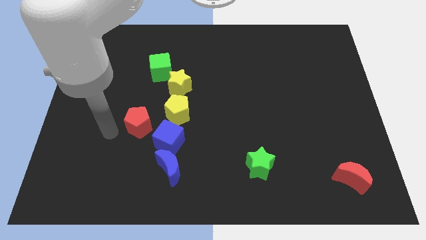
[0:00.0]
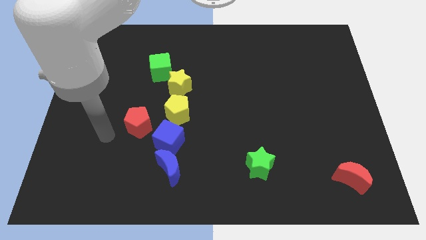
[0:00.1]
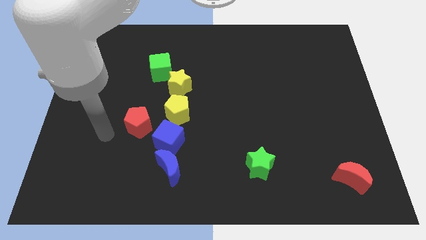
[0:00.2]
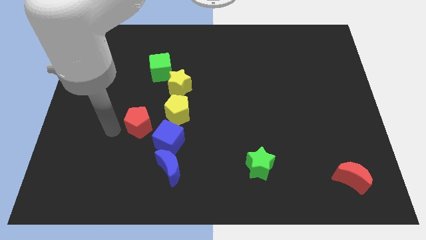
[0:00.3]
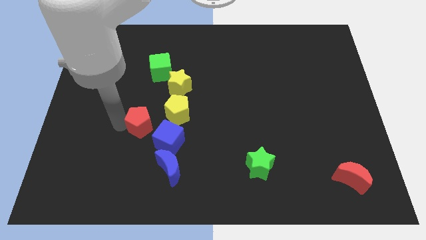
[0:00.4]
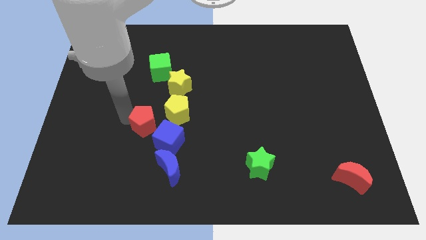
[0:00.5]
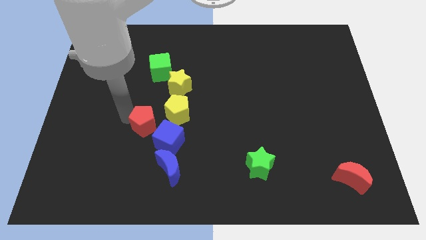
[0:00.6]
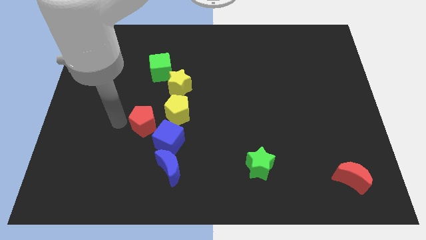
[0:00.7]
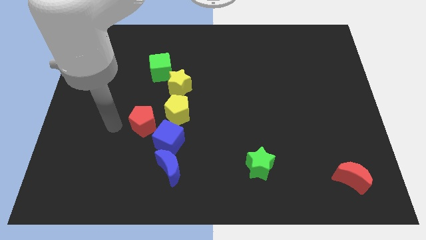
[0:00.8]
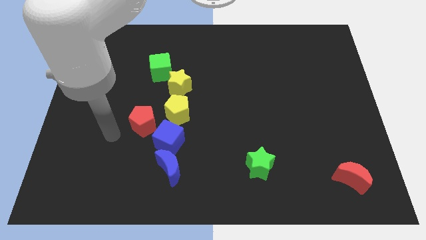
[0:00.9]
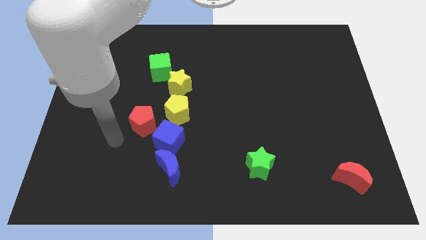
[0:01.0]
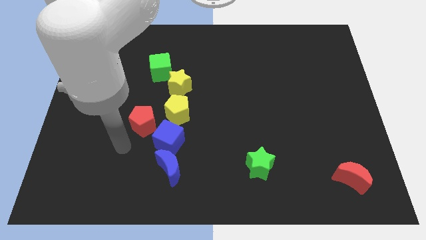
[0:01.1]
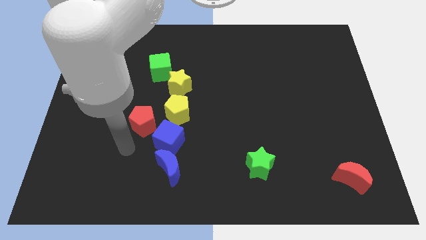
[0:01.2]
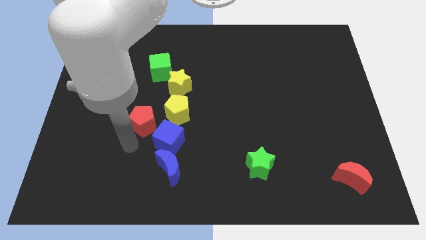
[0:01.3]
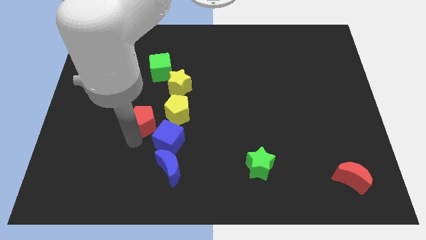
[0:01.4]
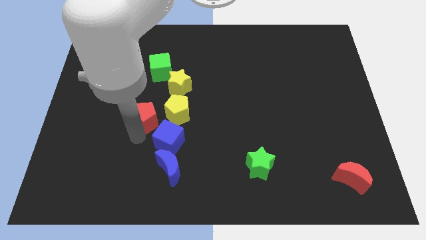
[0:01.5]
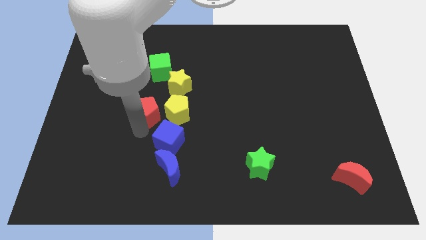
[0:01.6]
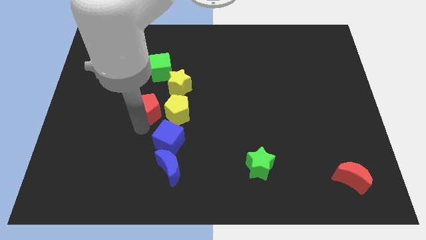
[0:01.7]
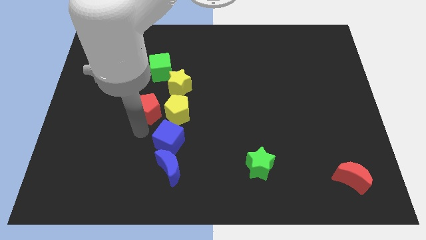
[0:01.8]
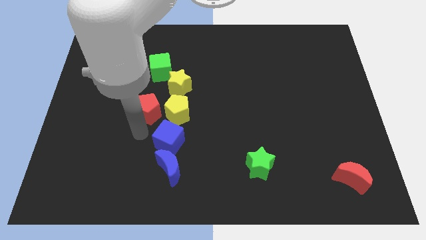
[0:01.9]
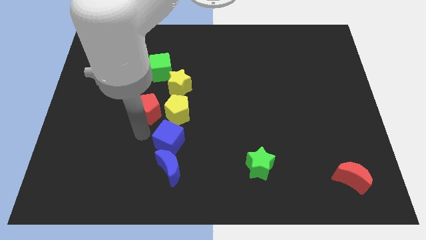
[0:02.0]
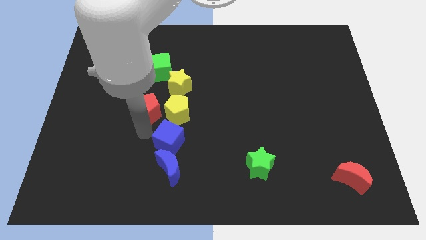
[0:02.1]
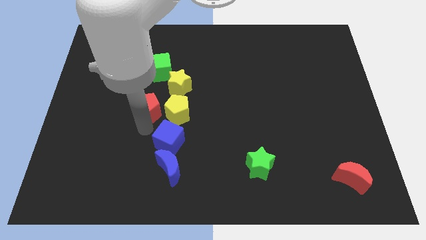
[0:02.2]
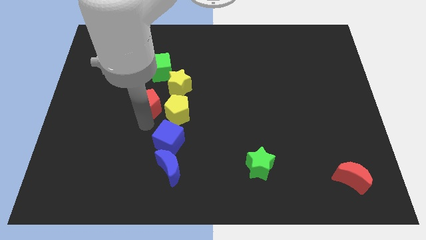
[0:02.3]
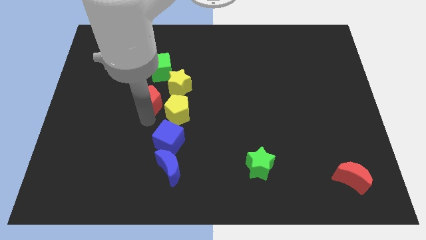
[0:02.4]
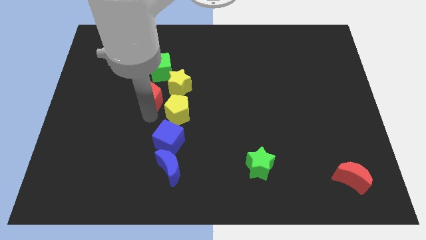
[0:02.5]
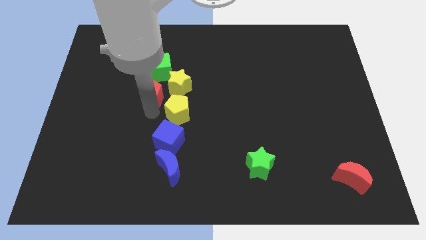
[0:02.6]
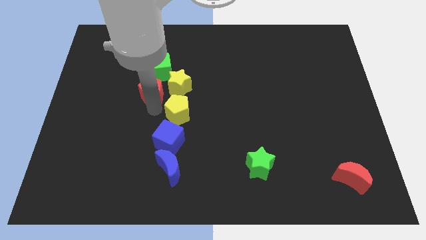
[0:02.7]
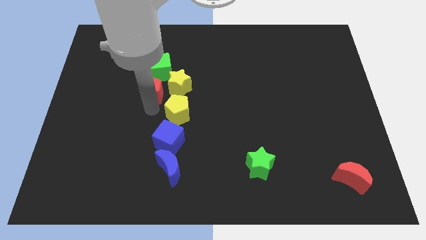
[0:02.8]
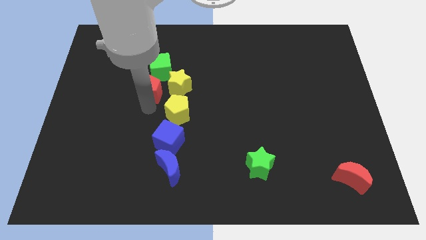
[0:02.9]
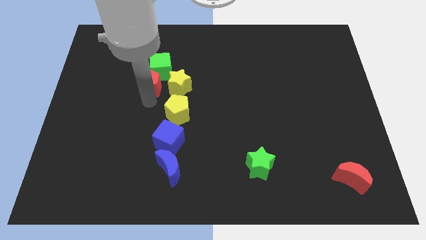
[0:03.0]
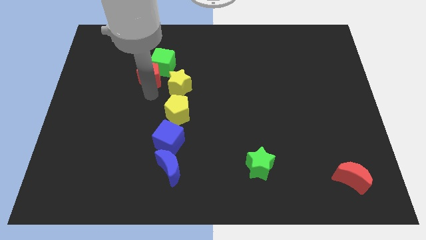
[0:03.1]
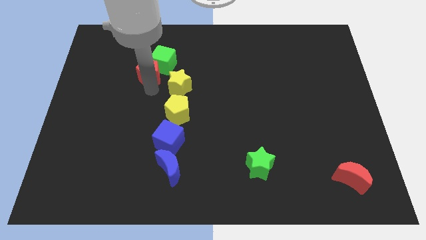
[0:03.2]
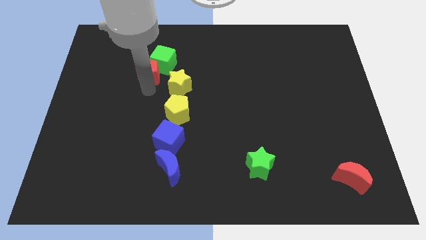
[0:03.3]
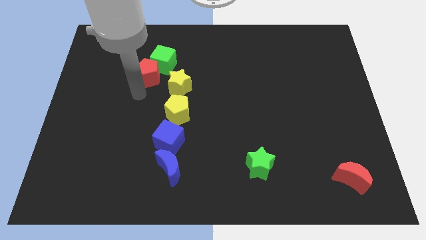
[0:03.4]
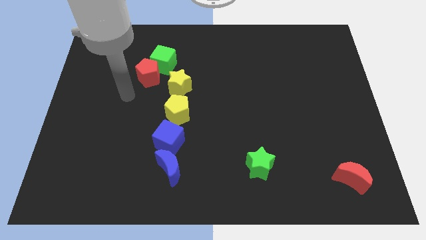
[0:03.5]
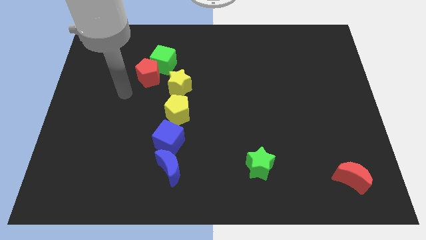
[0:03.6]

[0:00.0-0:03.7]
push the red pentagon into the green cube

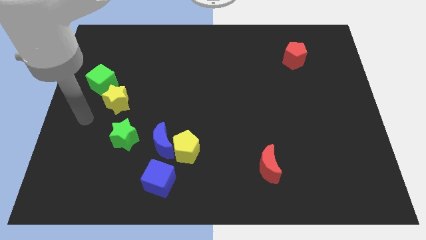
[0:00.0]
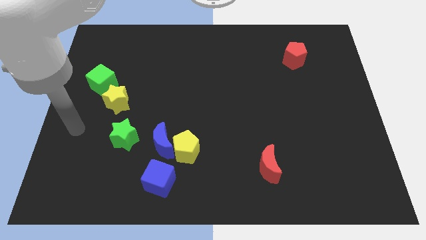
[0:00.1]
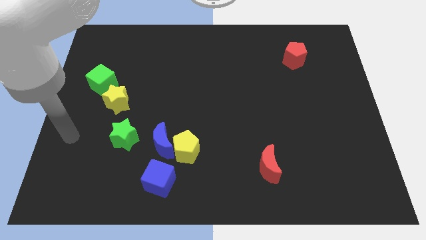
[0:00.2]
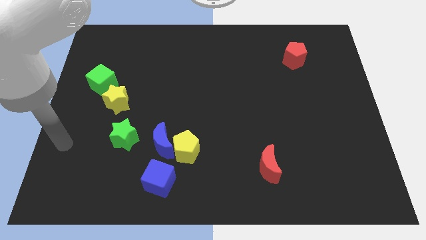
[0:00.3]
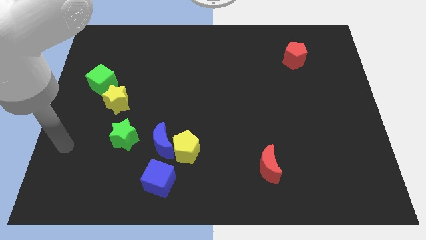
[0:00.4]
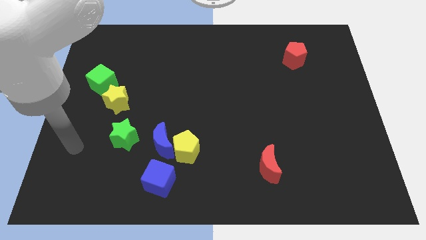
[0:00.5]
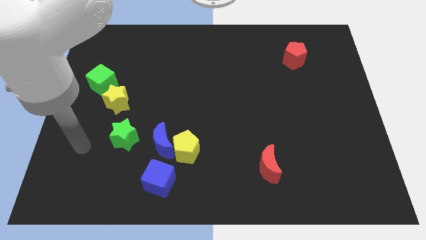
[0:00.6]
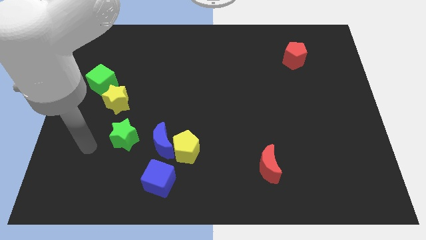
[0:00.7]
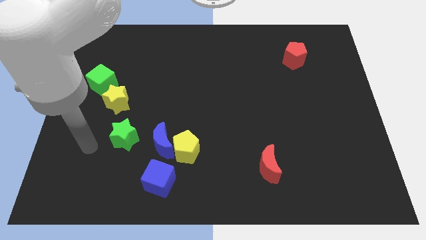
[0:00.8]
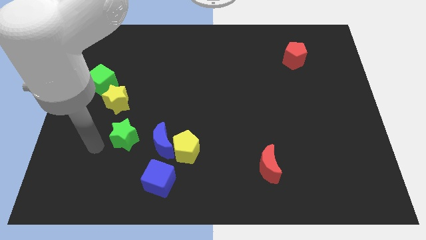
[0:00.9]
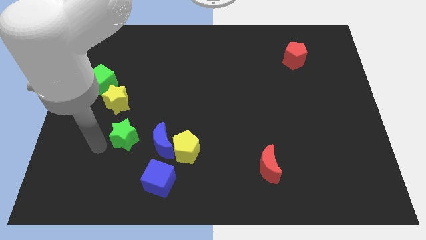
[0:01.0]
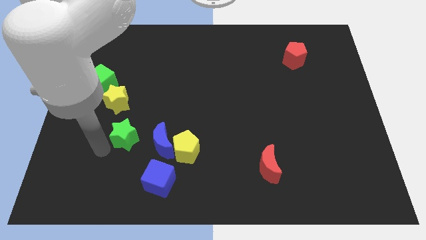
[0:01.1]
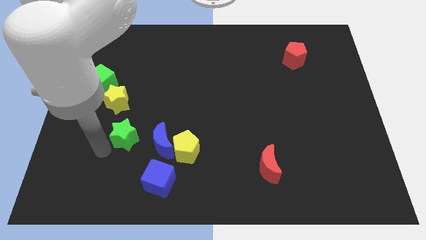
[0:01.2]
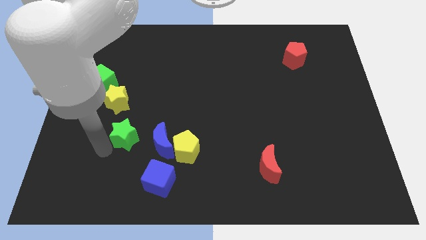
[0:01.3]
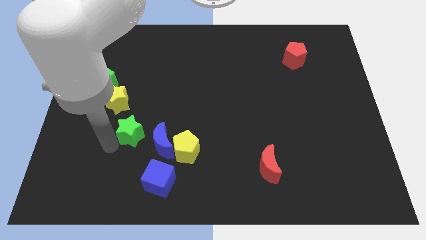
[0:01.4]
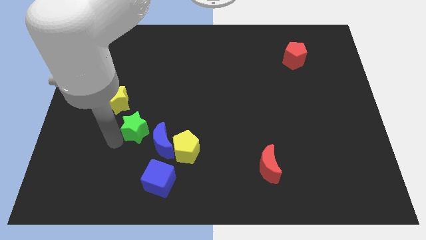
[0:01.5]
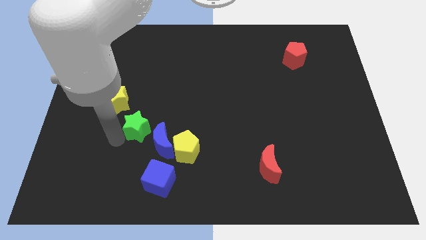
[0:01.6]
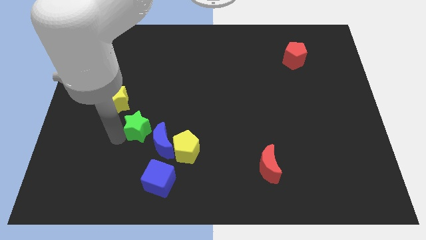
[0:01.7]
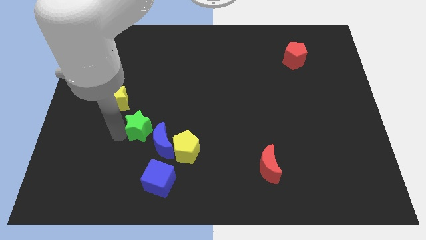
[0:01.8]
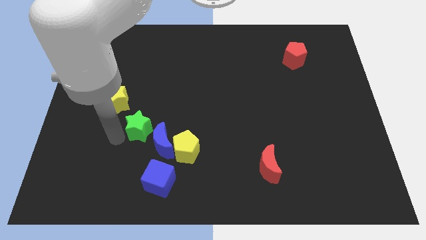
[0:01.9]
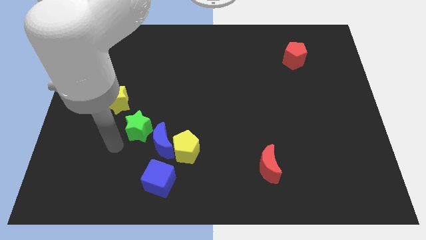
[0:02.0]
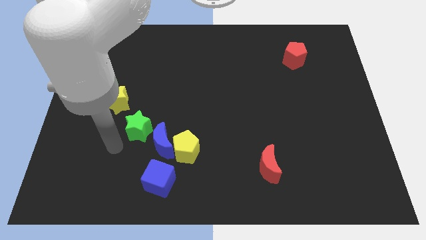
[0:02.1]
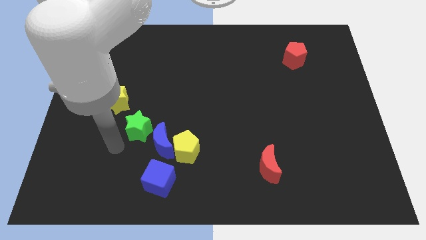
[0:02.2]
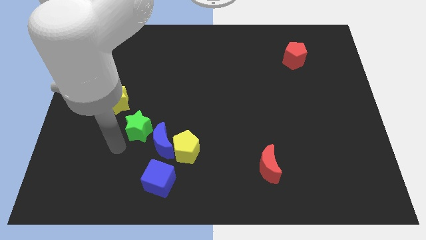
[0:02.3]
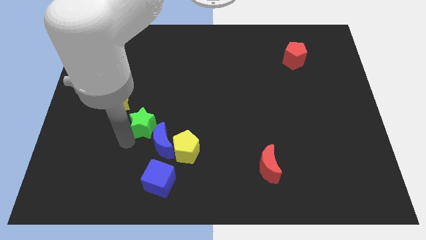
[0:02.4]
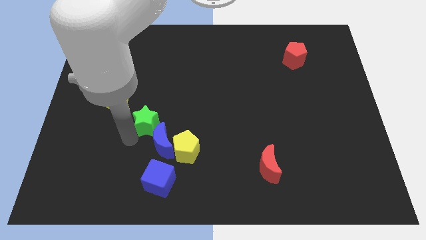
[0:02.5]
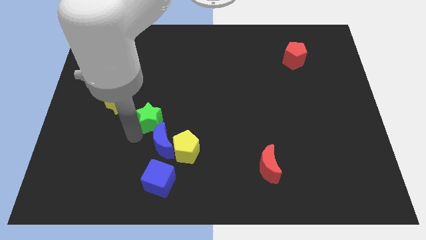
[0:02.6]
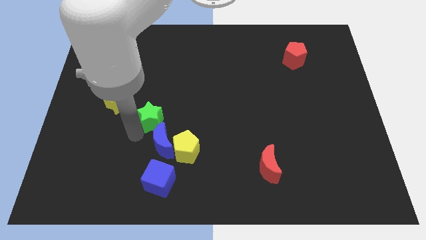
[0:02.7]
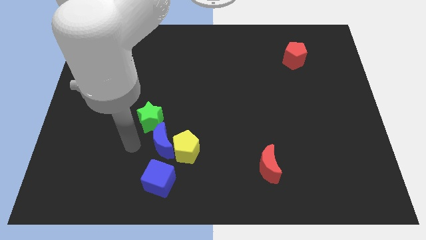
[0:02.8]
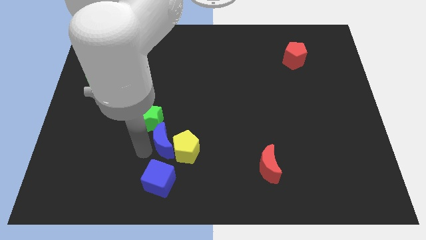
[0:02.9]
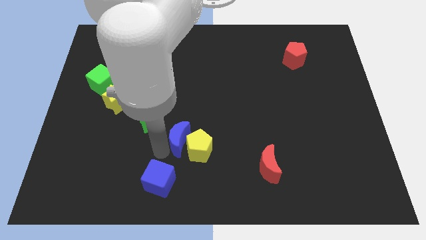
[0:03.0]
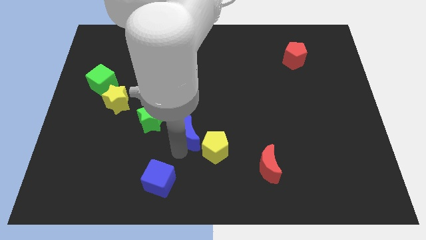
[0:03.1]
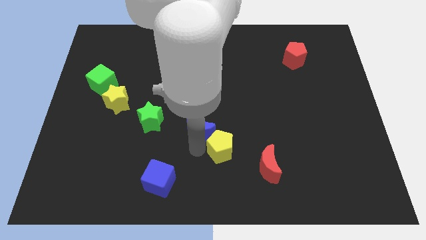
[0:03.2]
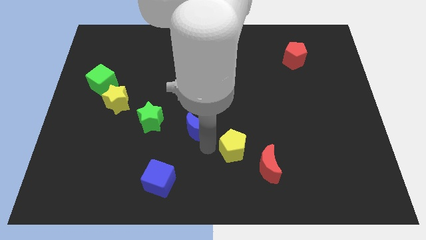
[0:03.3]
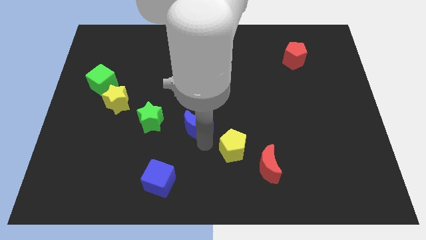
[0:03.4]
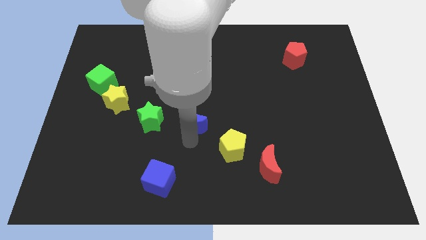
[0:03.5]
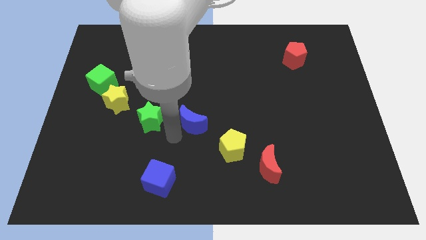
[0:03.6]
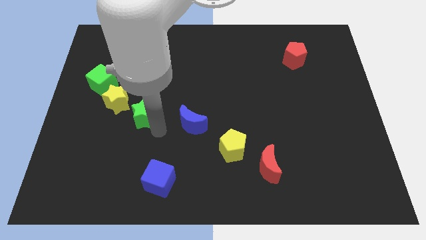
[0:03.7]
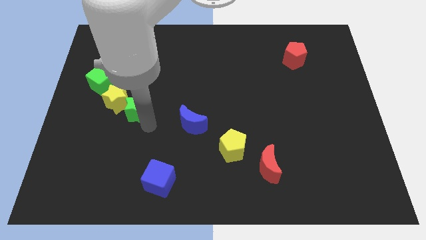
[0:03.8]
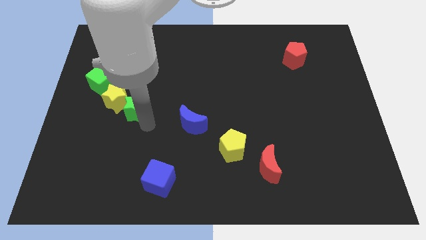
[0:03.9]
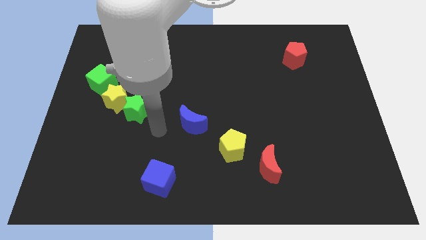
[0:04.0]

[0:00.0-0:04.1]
push the green star to the right of the yellow star

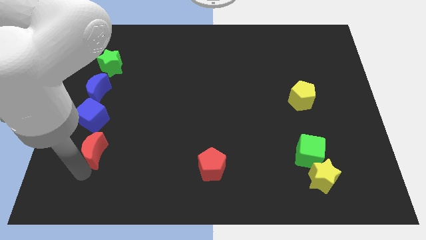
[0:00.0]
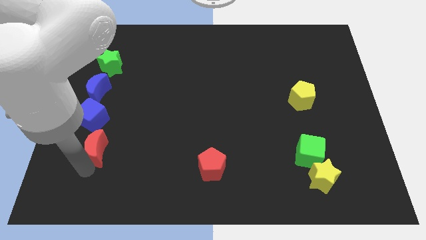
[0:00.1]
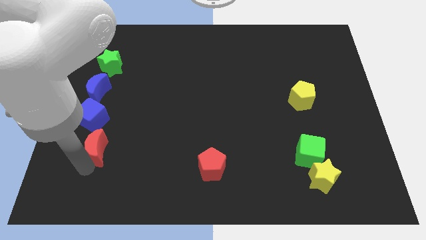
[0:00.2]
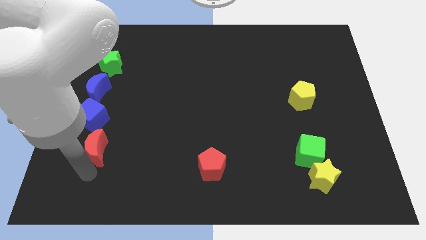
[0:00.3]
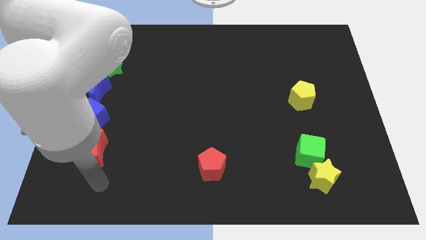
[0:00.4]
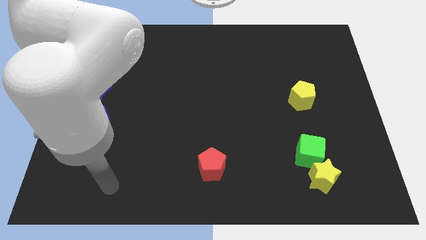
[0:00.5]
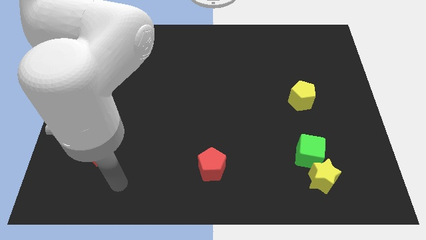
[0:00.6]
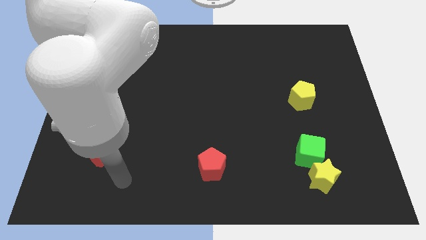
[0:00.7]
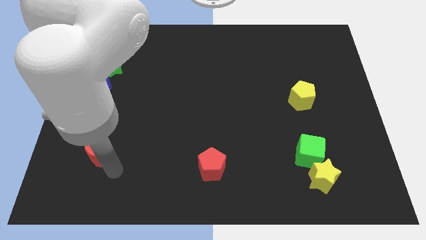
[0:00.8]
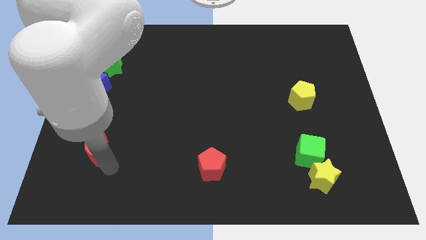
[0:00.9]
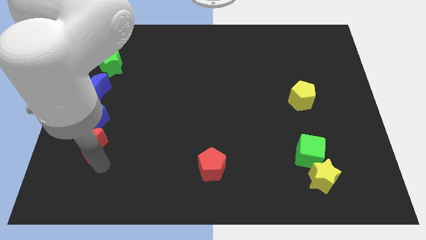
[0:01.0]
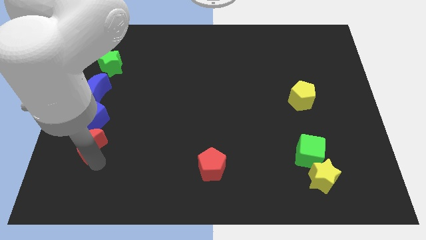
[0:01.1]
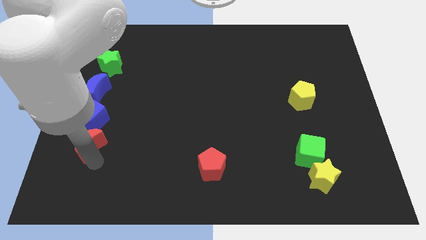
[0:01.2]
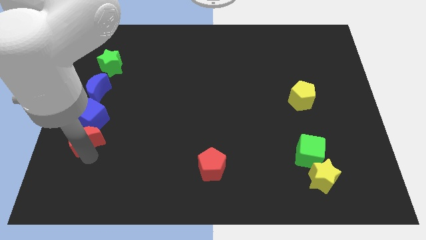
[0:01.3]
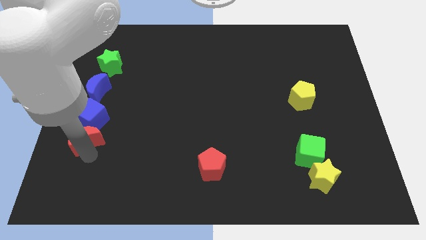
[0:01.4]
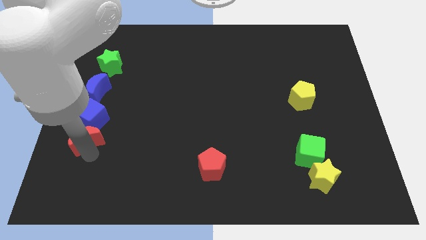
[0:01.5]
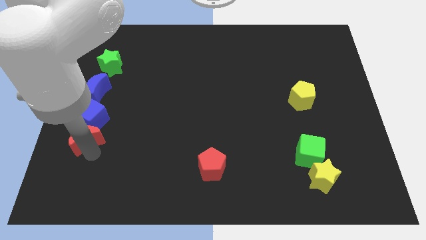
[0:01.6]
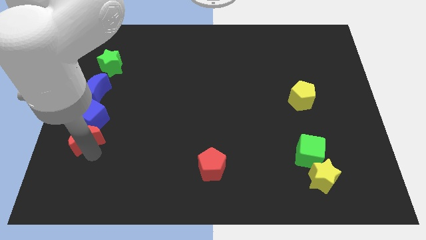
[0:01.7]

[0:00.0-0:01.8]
move the red moon into the bottom side of the blue cube
